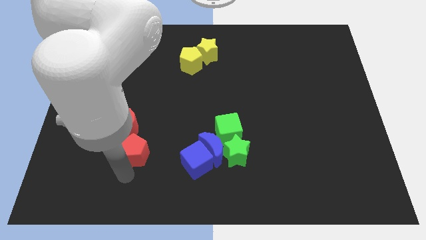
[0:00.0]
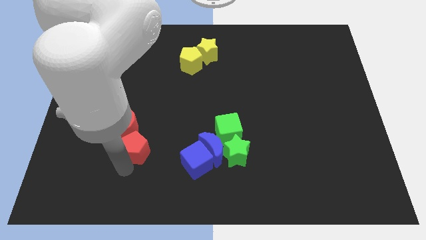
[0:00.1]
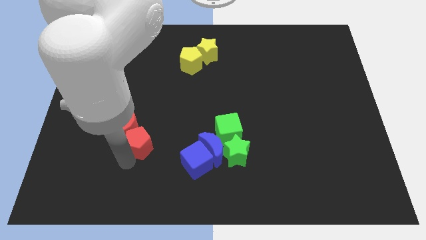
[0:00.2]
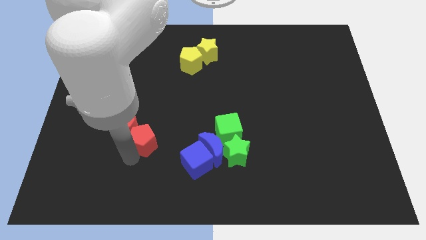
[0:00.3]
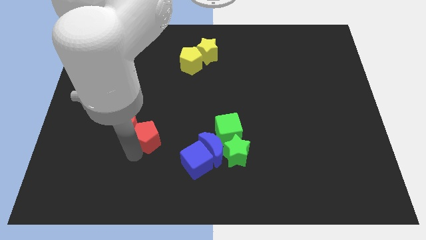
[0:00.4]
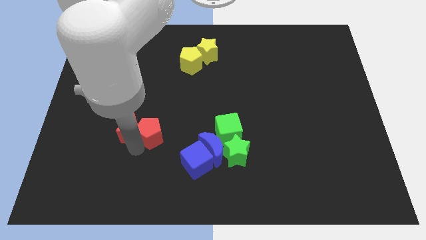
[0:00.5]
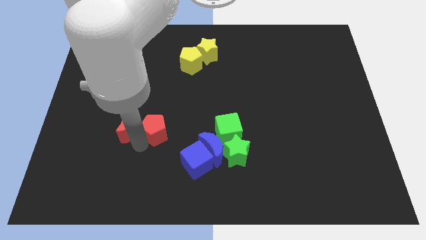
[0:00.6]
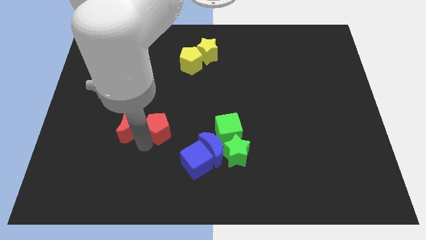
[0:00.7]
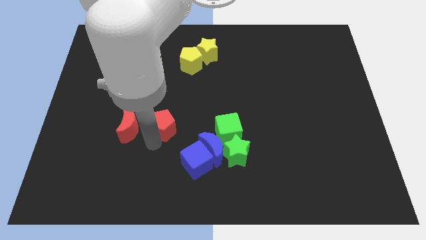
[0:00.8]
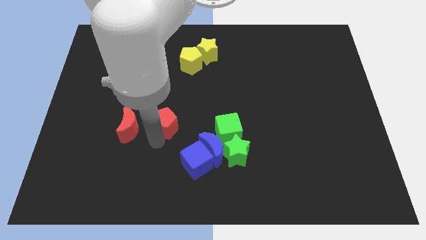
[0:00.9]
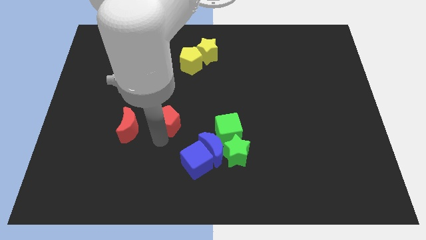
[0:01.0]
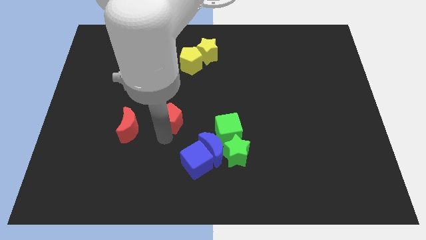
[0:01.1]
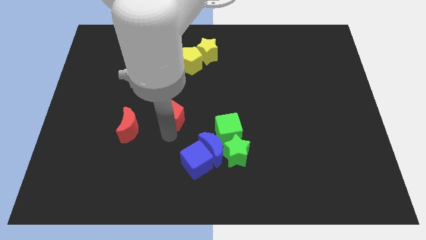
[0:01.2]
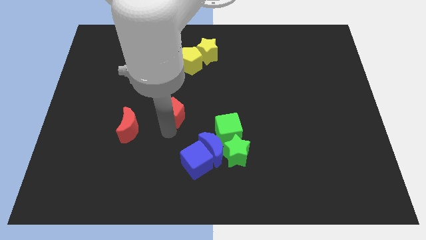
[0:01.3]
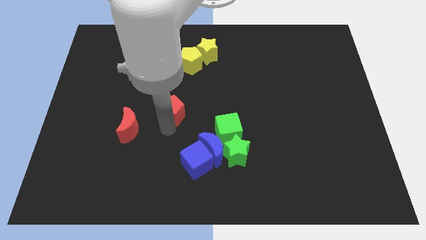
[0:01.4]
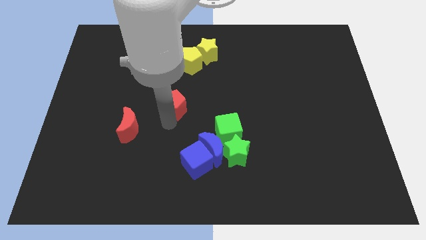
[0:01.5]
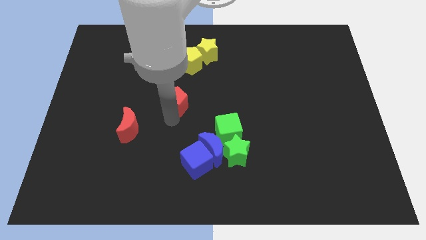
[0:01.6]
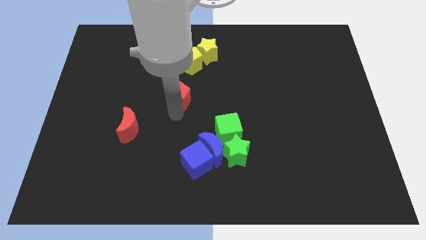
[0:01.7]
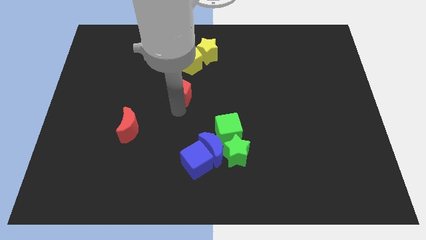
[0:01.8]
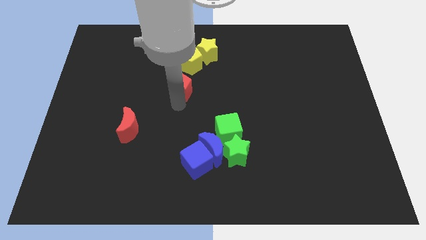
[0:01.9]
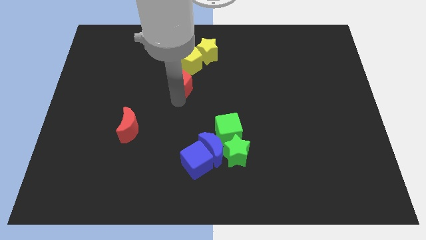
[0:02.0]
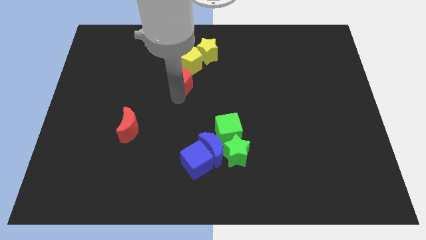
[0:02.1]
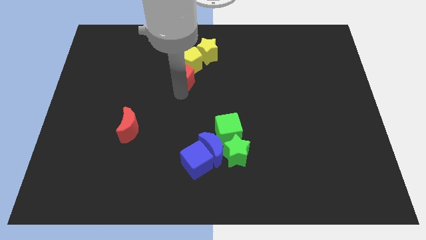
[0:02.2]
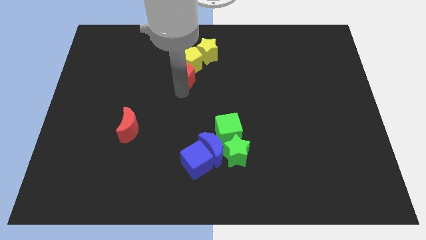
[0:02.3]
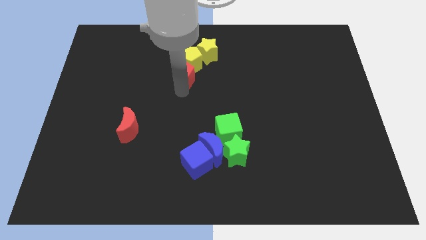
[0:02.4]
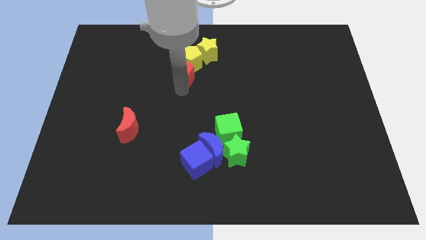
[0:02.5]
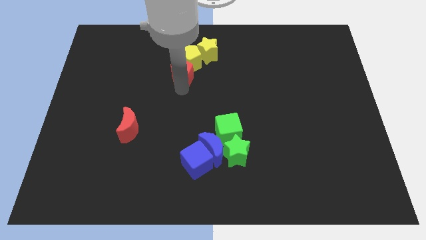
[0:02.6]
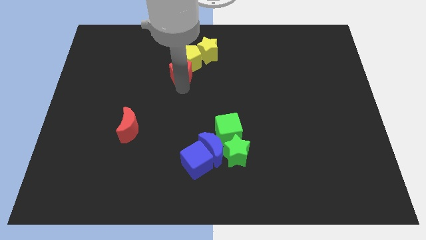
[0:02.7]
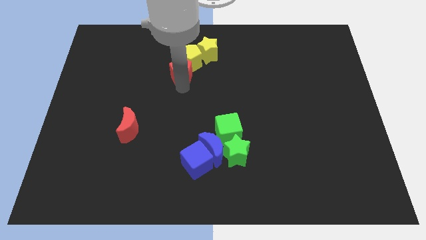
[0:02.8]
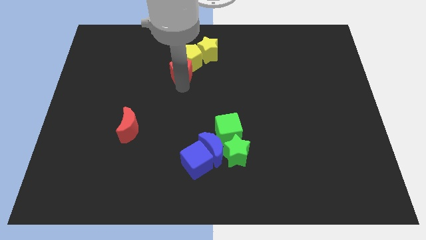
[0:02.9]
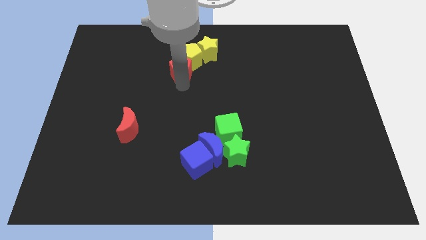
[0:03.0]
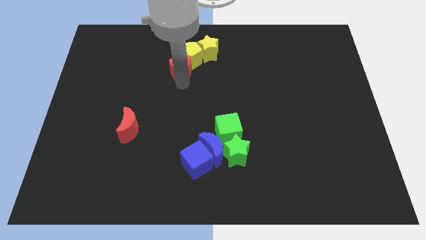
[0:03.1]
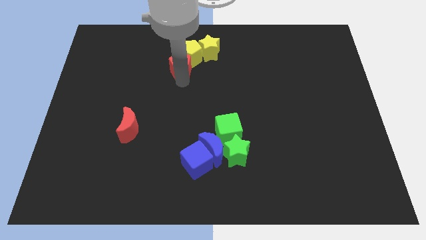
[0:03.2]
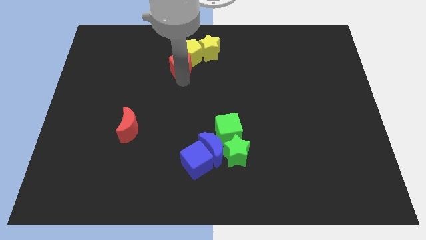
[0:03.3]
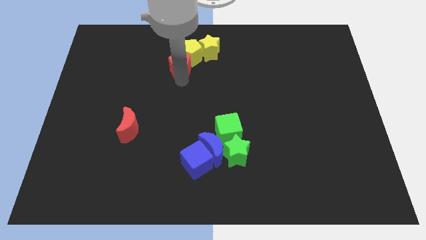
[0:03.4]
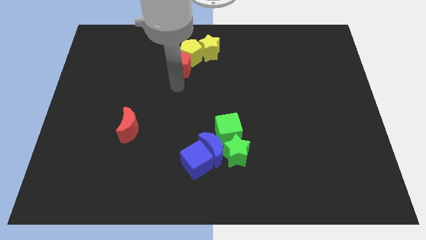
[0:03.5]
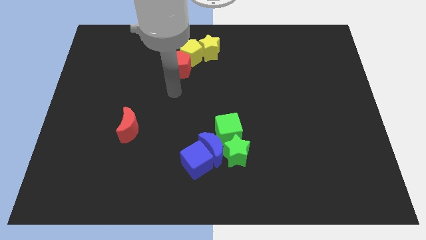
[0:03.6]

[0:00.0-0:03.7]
push the red pentagon into the yellow pentagon

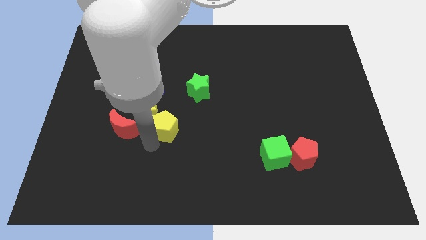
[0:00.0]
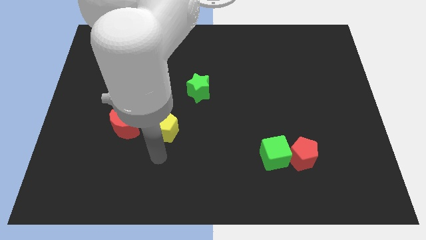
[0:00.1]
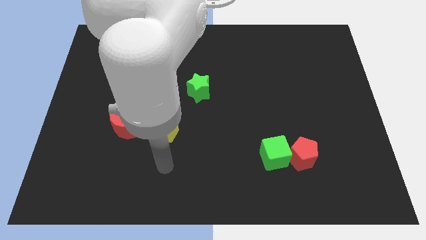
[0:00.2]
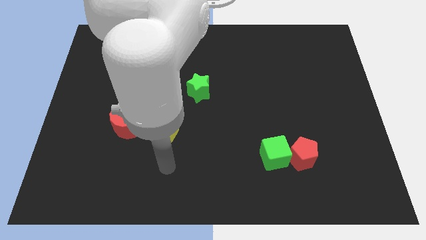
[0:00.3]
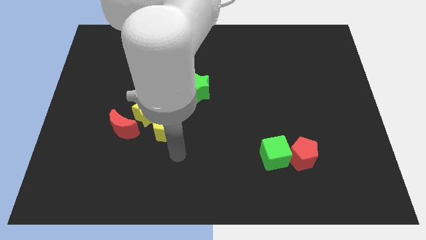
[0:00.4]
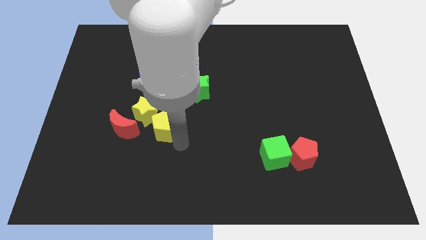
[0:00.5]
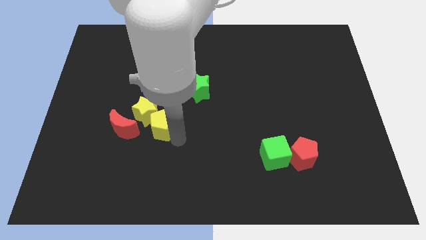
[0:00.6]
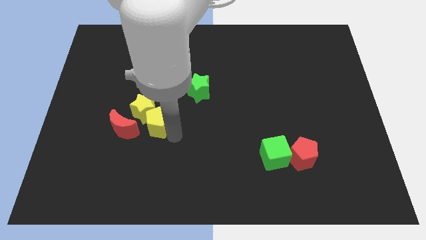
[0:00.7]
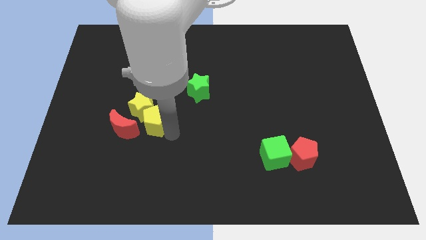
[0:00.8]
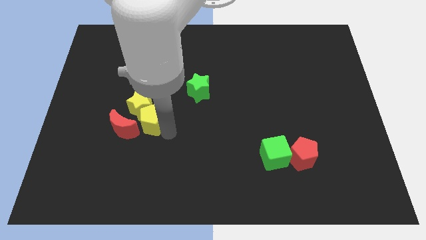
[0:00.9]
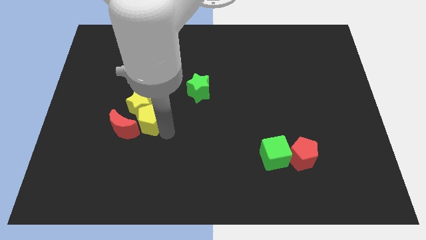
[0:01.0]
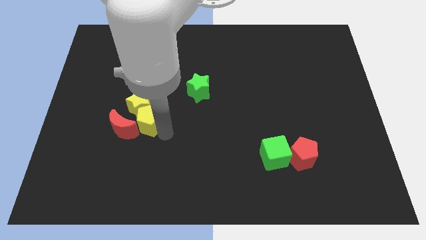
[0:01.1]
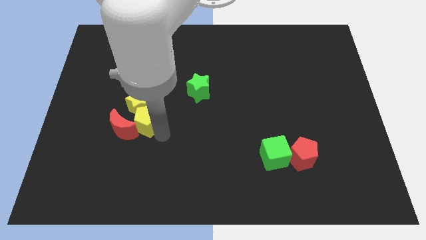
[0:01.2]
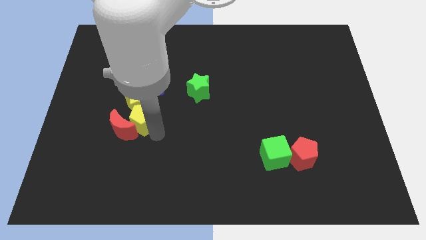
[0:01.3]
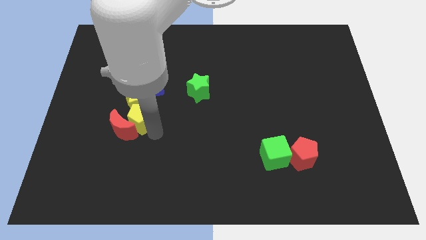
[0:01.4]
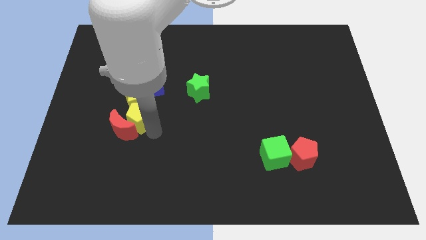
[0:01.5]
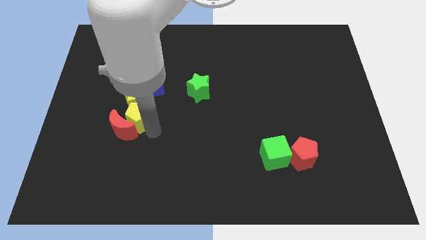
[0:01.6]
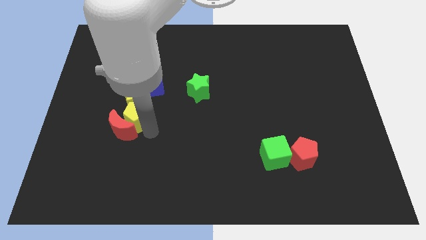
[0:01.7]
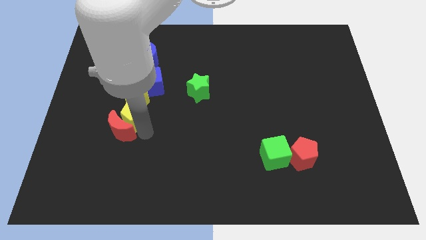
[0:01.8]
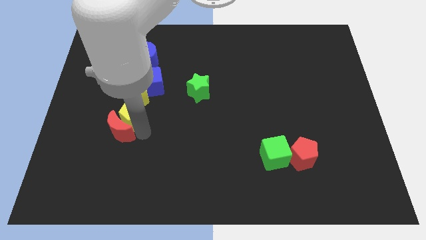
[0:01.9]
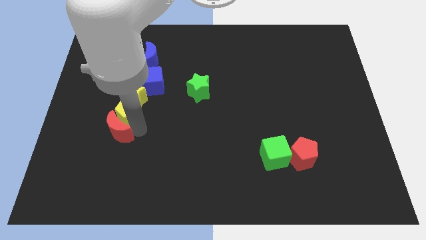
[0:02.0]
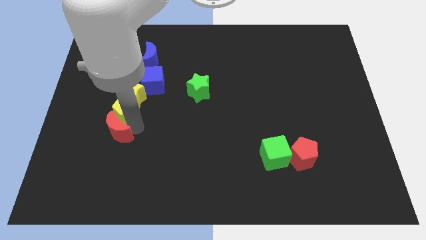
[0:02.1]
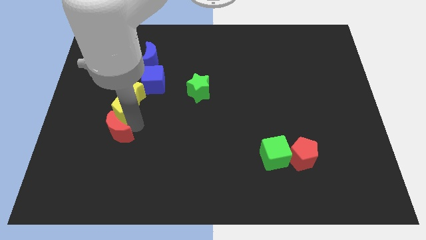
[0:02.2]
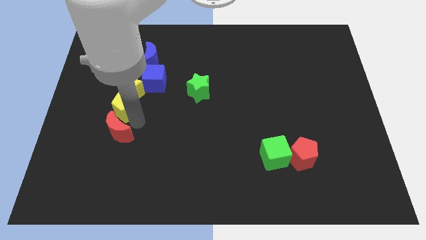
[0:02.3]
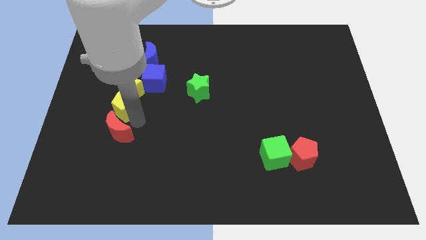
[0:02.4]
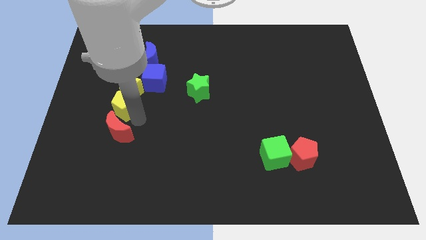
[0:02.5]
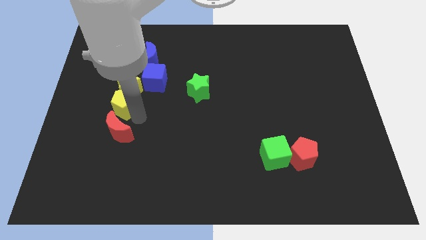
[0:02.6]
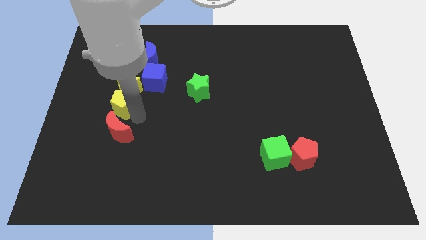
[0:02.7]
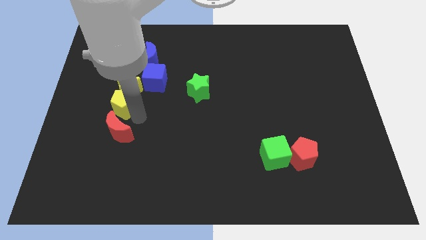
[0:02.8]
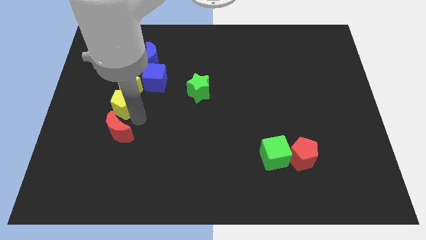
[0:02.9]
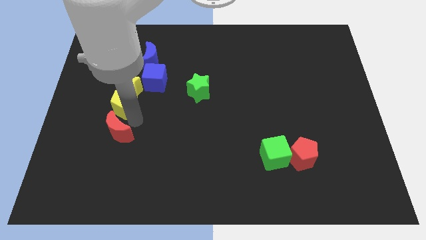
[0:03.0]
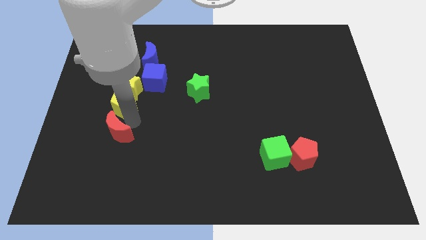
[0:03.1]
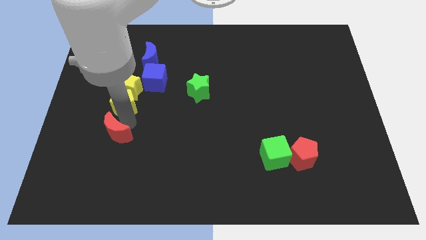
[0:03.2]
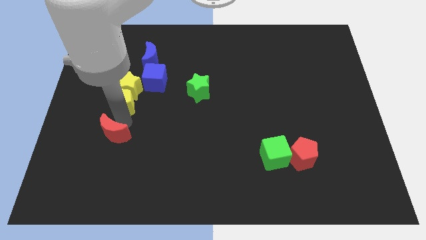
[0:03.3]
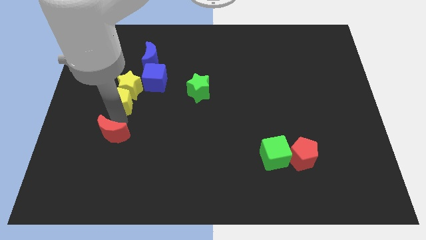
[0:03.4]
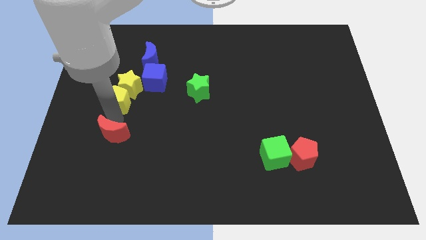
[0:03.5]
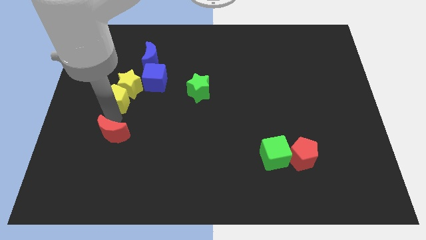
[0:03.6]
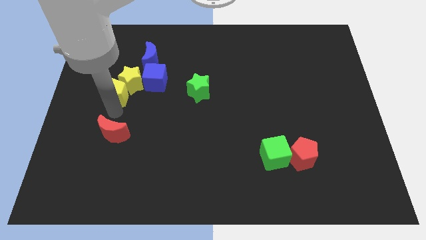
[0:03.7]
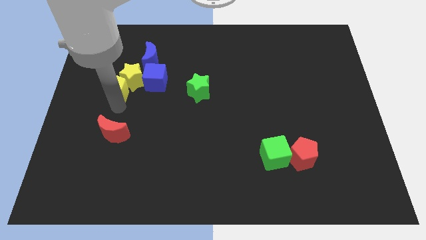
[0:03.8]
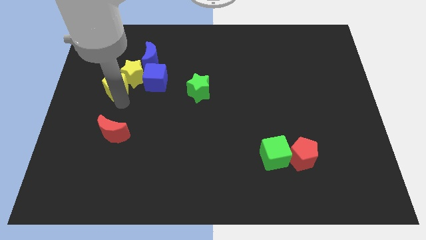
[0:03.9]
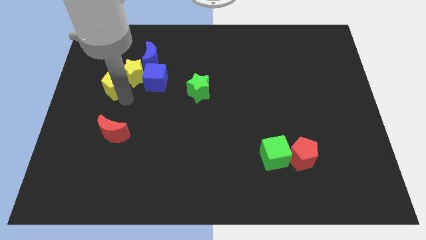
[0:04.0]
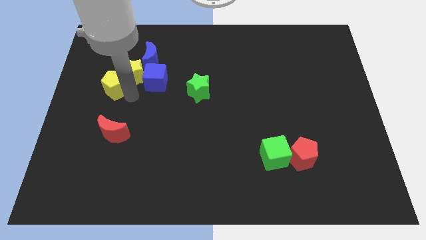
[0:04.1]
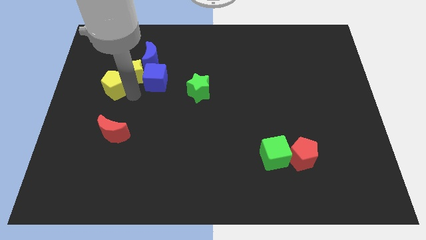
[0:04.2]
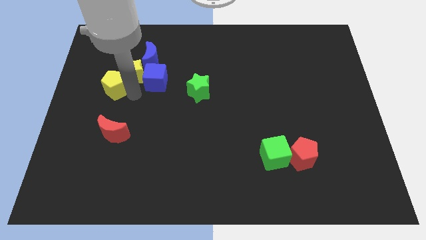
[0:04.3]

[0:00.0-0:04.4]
move the yellow blocks to the left of the blue cube

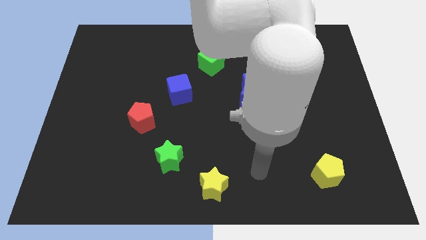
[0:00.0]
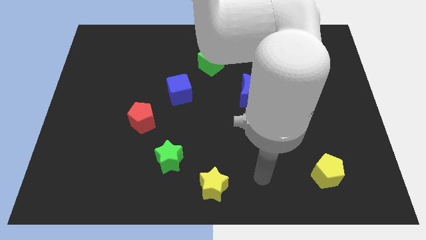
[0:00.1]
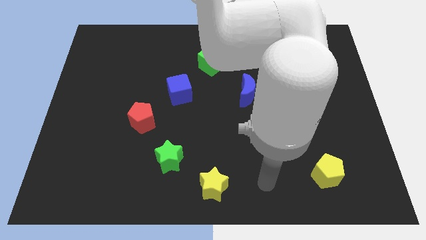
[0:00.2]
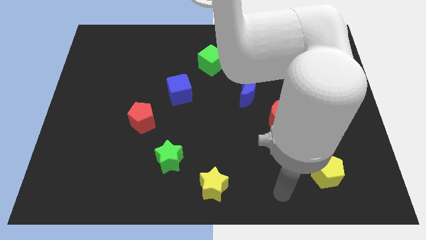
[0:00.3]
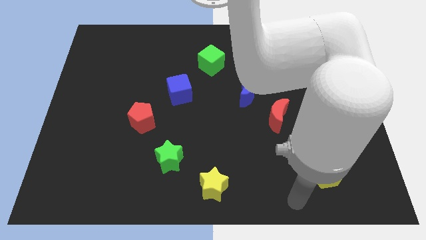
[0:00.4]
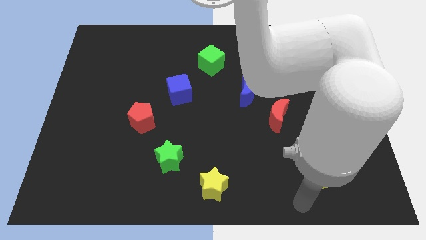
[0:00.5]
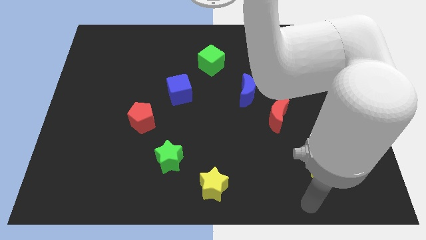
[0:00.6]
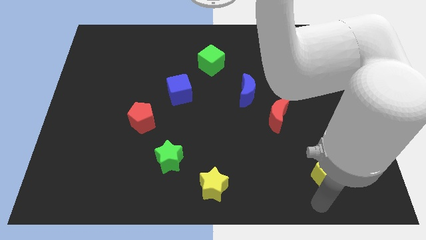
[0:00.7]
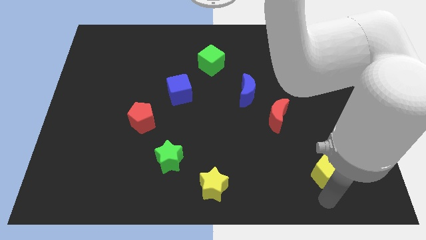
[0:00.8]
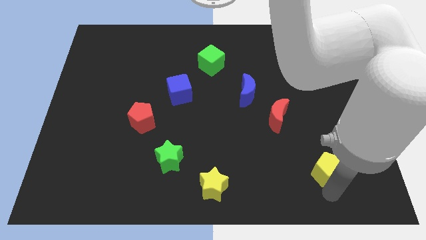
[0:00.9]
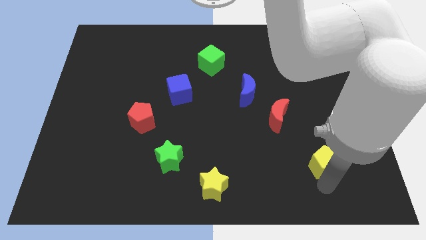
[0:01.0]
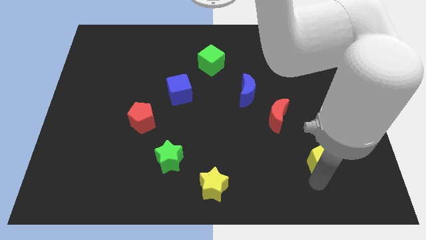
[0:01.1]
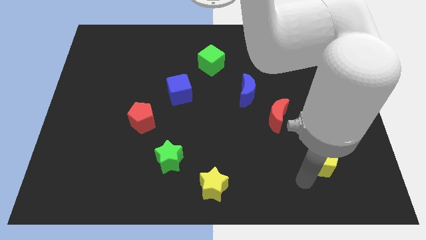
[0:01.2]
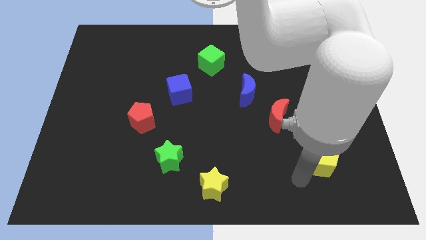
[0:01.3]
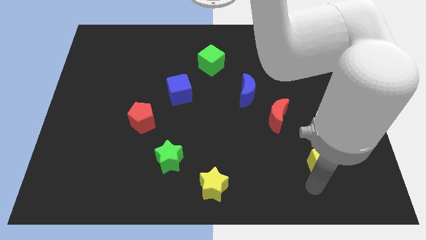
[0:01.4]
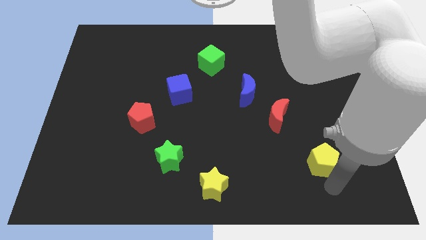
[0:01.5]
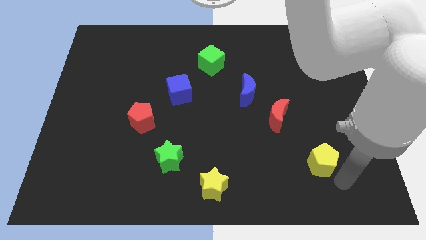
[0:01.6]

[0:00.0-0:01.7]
slide the yellow pentagon slightly towards up
